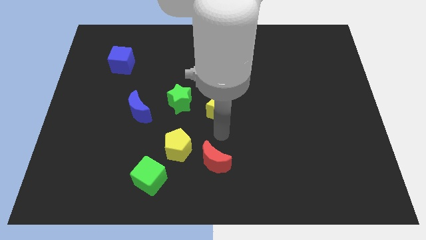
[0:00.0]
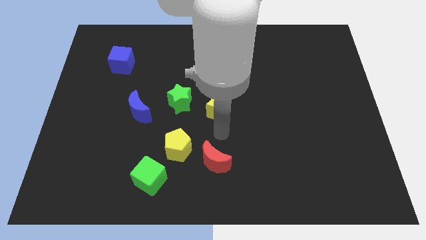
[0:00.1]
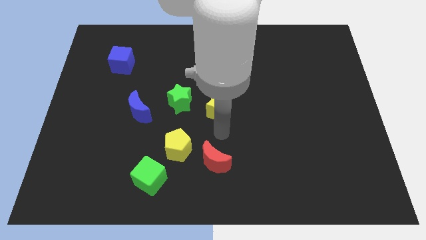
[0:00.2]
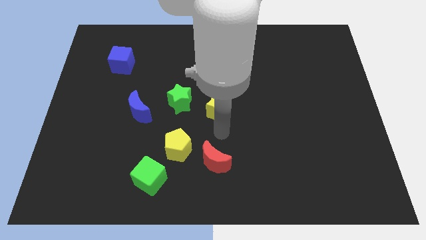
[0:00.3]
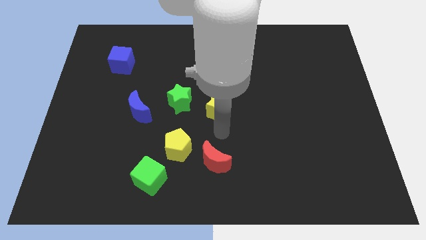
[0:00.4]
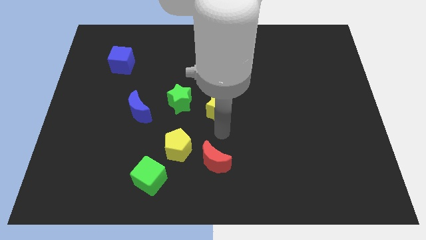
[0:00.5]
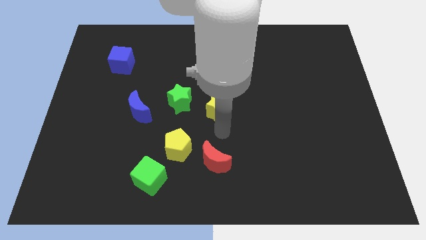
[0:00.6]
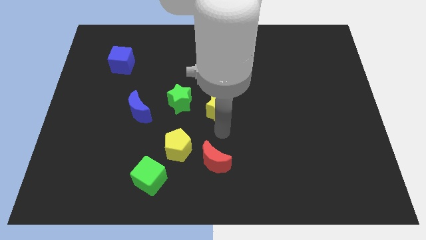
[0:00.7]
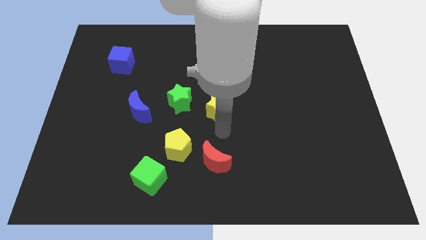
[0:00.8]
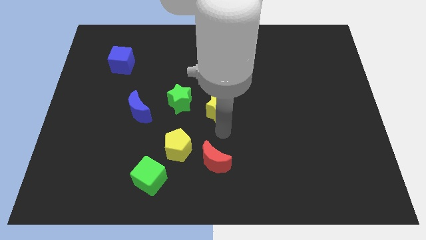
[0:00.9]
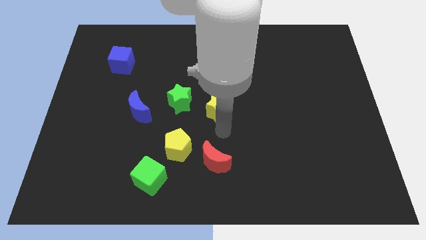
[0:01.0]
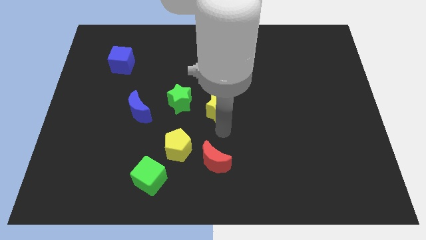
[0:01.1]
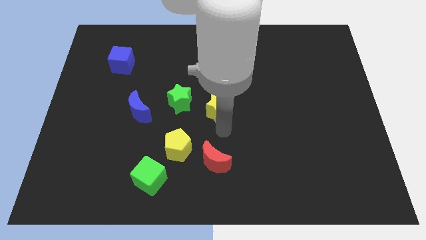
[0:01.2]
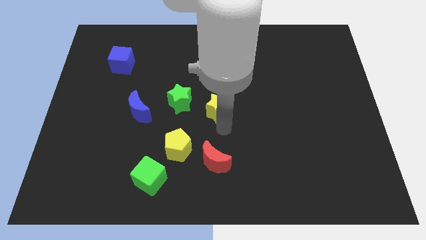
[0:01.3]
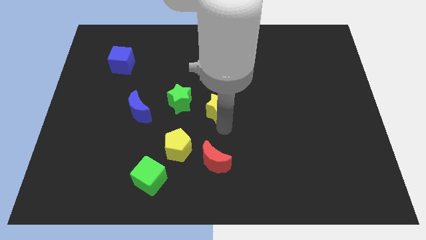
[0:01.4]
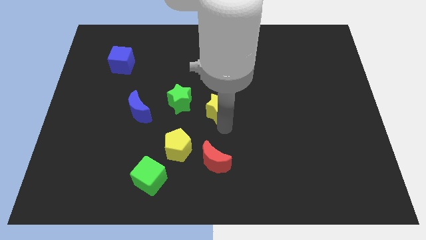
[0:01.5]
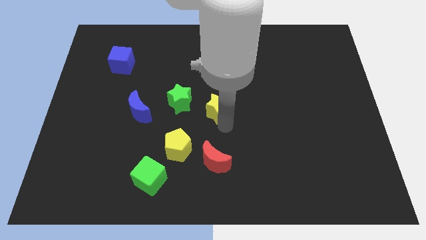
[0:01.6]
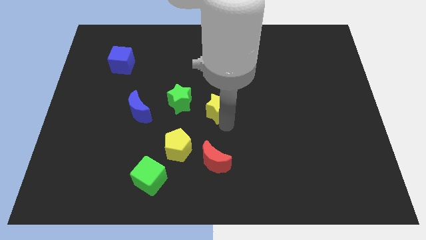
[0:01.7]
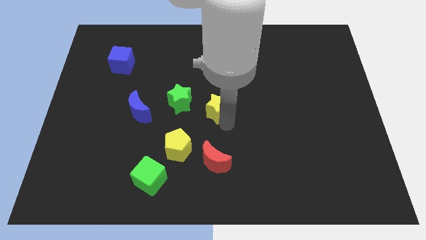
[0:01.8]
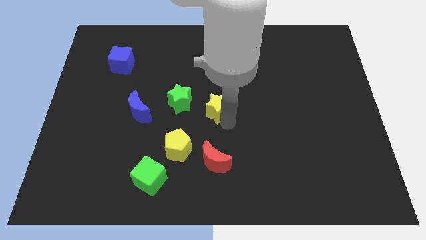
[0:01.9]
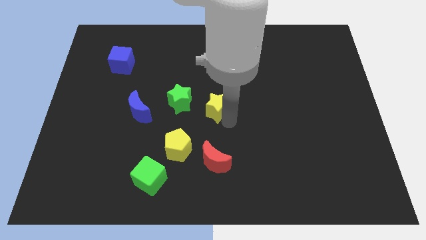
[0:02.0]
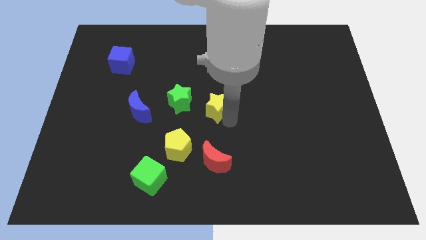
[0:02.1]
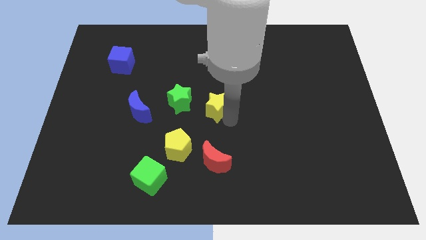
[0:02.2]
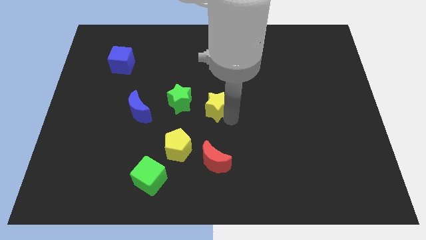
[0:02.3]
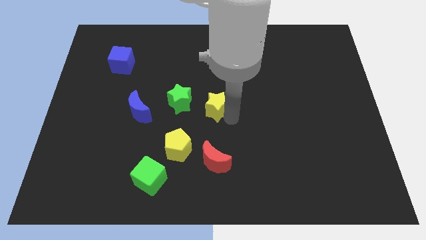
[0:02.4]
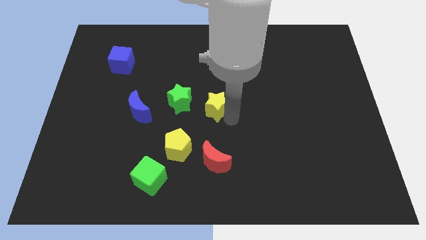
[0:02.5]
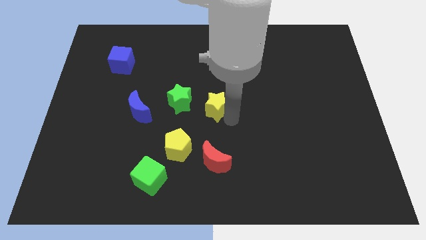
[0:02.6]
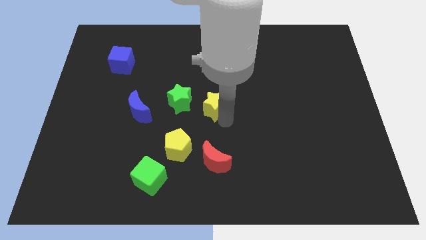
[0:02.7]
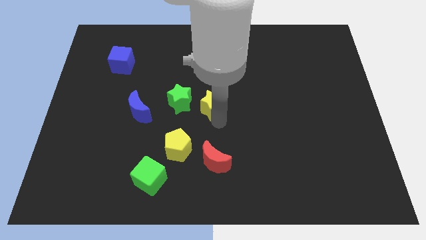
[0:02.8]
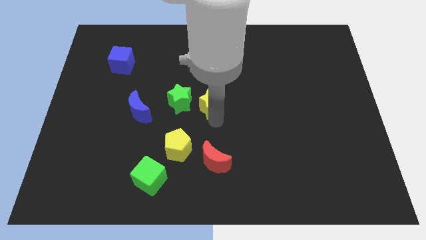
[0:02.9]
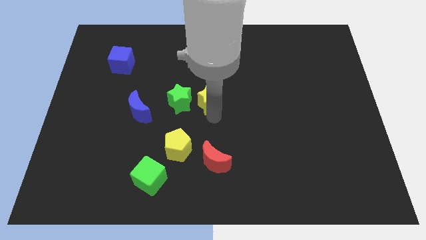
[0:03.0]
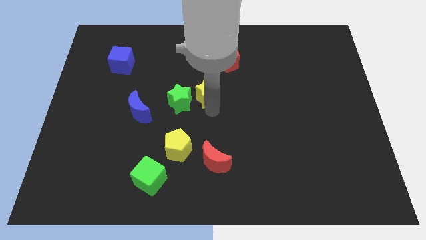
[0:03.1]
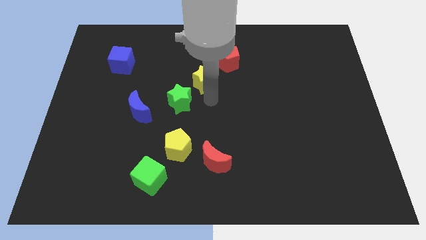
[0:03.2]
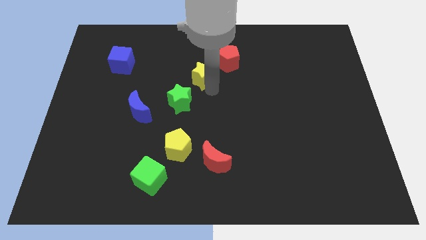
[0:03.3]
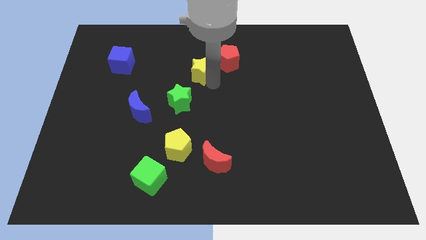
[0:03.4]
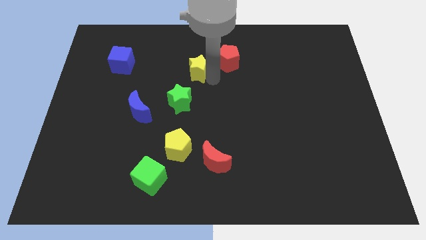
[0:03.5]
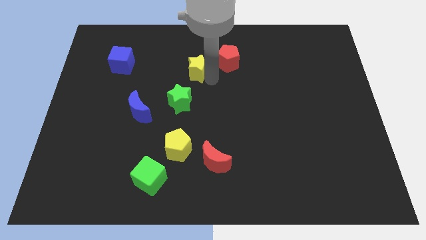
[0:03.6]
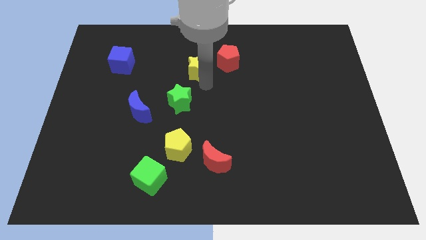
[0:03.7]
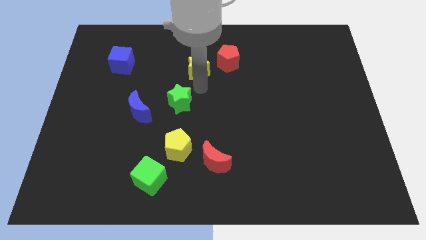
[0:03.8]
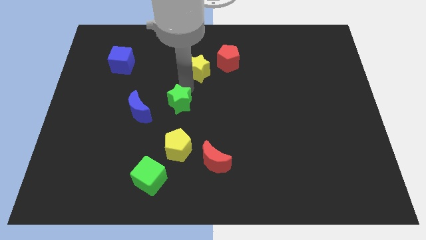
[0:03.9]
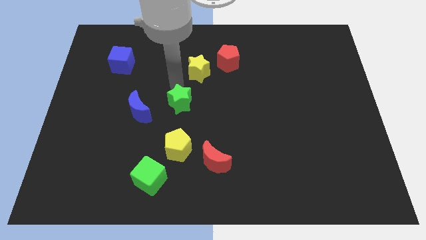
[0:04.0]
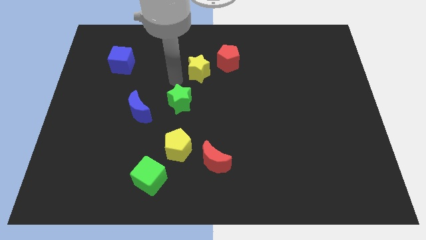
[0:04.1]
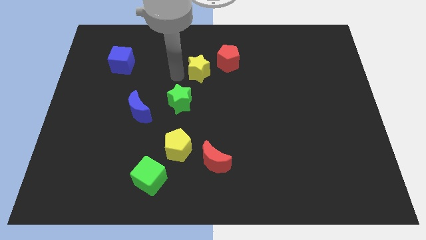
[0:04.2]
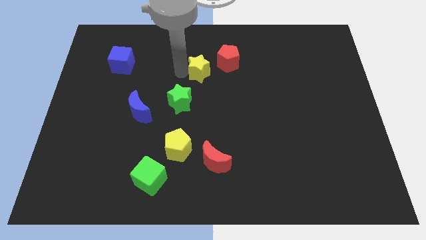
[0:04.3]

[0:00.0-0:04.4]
push the yellow star towards the left of red pentagon

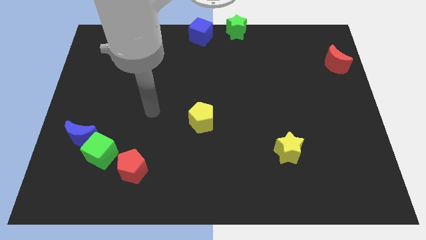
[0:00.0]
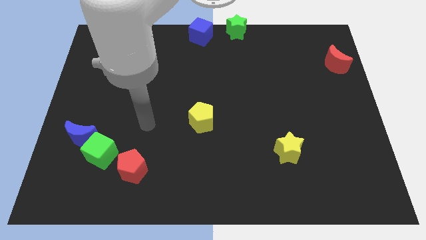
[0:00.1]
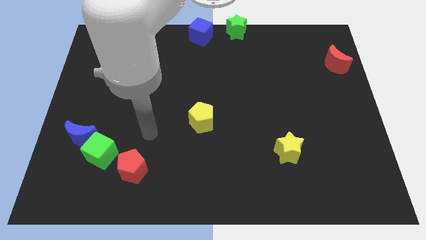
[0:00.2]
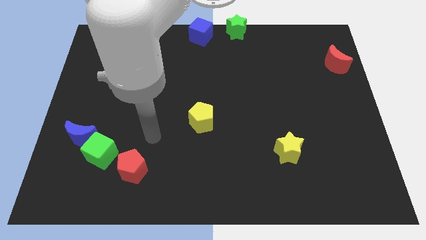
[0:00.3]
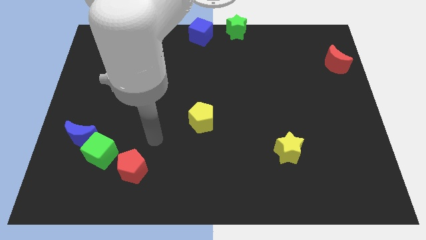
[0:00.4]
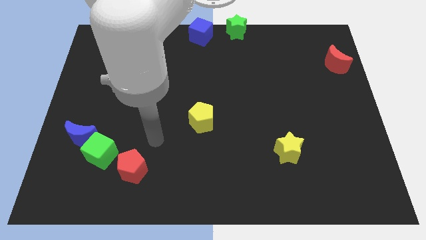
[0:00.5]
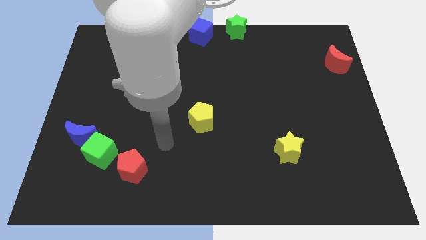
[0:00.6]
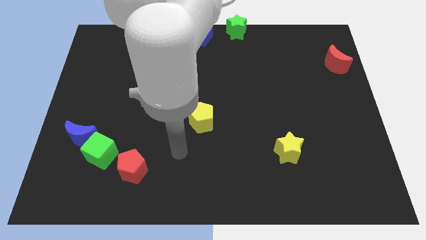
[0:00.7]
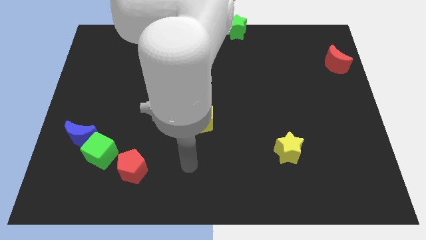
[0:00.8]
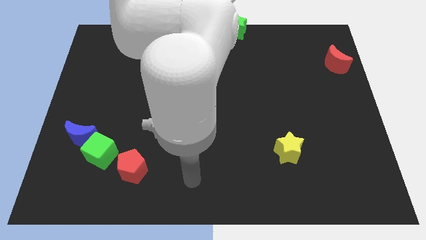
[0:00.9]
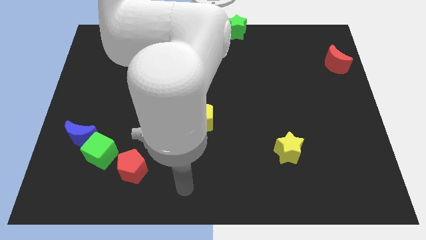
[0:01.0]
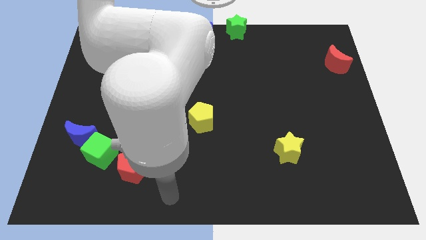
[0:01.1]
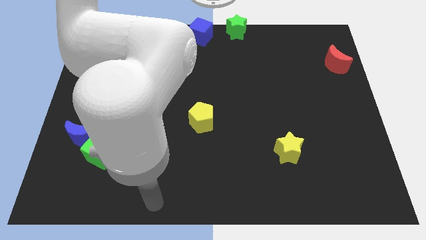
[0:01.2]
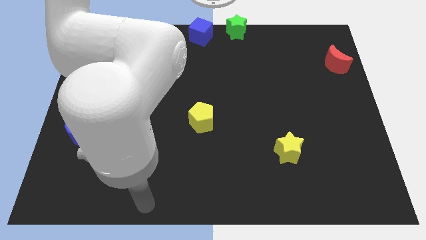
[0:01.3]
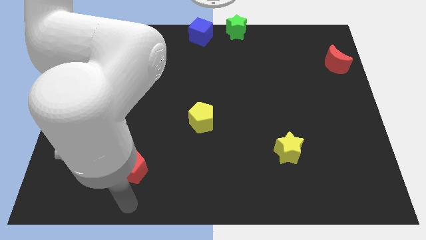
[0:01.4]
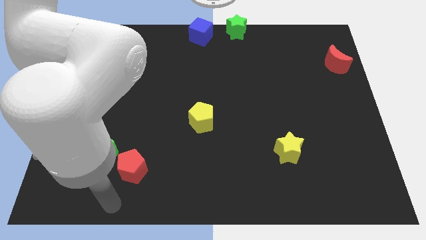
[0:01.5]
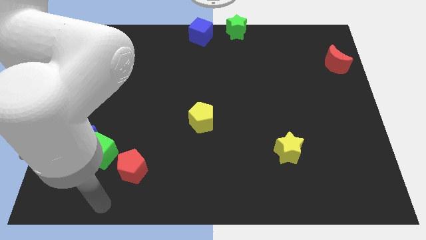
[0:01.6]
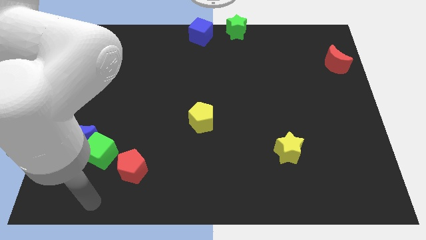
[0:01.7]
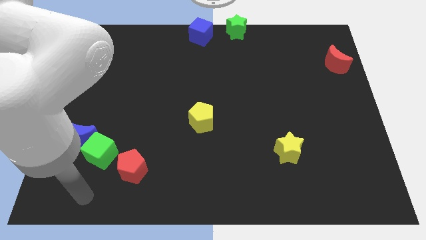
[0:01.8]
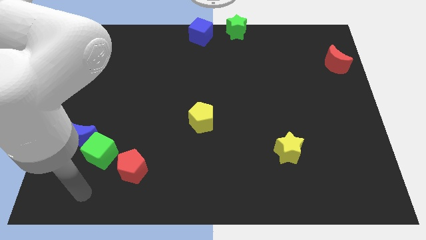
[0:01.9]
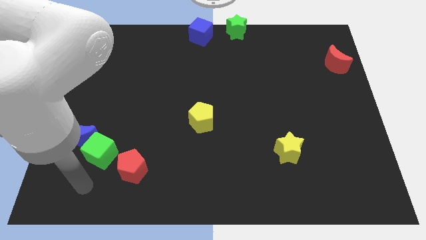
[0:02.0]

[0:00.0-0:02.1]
move your arm to the bottom of the green cube

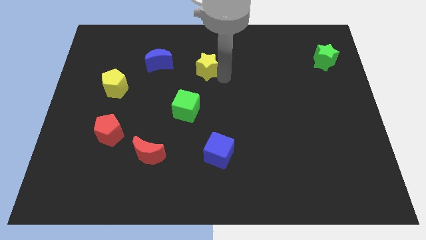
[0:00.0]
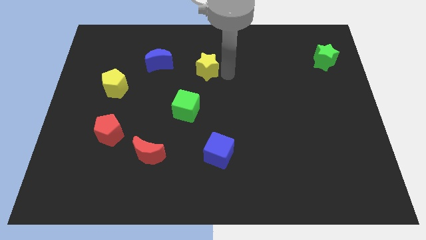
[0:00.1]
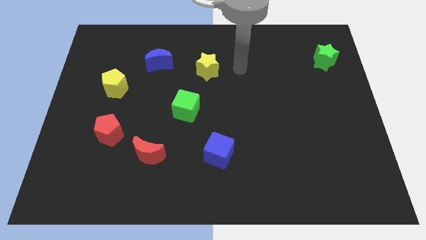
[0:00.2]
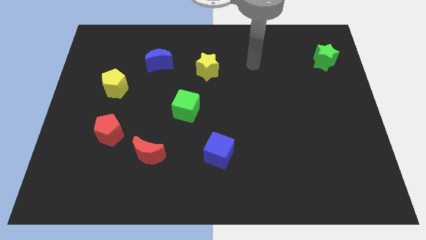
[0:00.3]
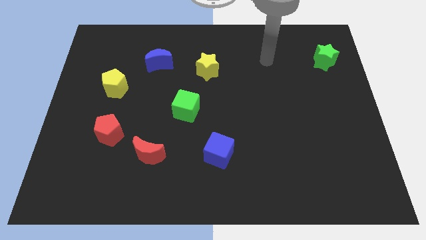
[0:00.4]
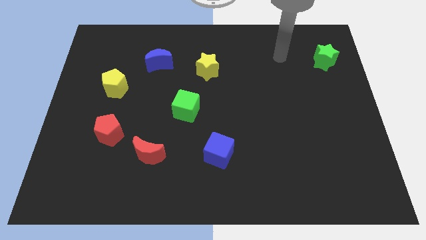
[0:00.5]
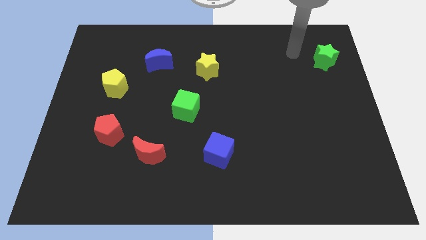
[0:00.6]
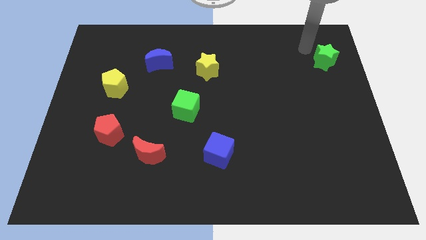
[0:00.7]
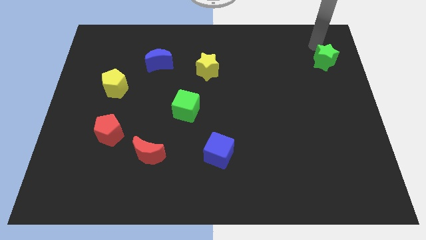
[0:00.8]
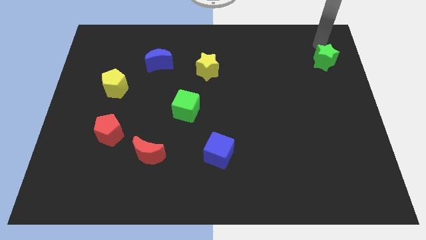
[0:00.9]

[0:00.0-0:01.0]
move the arm away from the yellow star

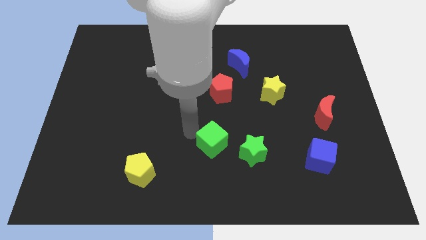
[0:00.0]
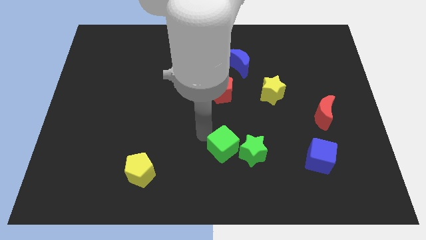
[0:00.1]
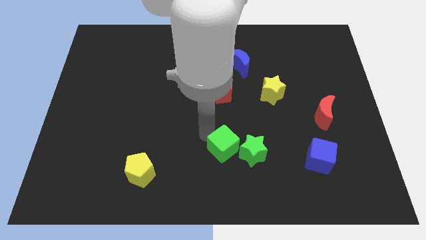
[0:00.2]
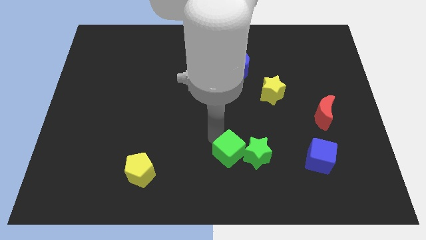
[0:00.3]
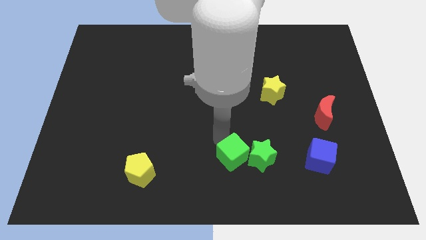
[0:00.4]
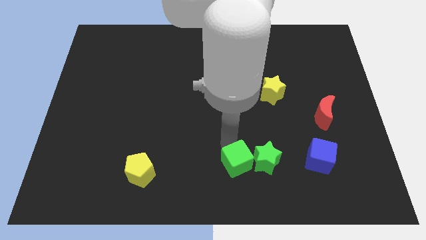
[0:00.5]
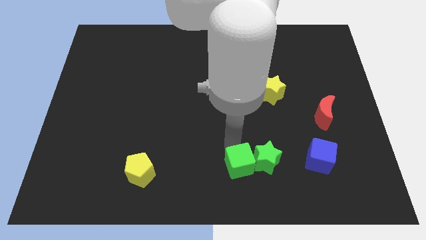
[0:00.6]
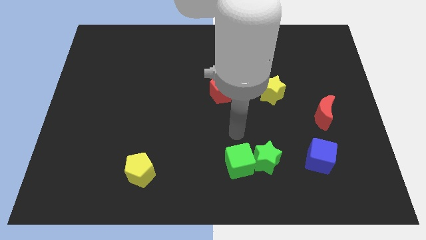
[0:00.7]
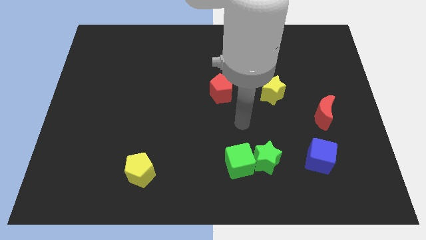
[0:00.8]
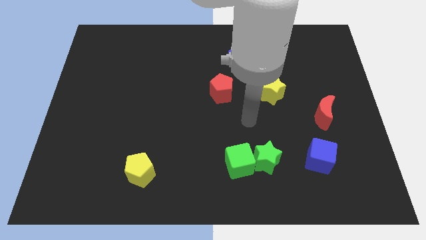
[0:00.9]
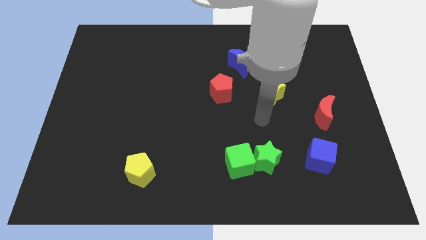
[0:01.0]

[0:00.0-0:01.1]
push the green cube into the green star

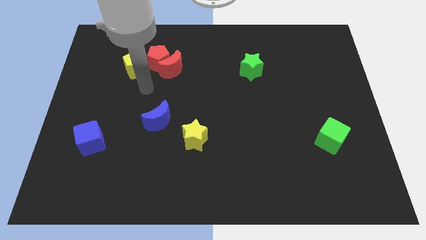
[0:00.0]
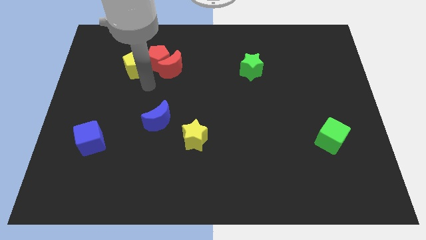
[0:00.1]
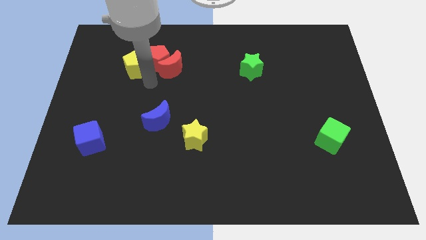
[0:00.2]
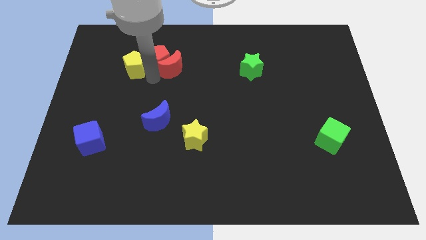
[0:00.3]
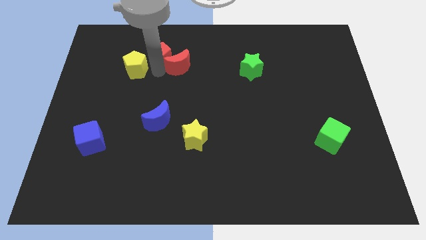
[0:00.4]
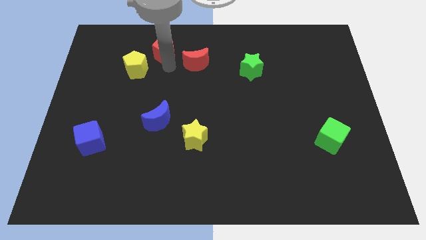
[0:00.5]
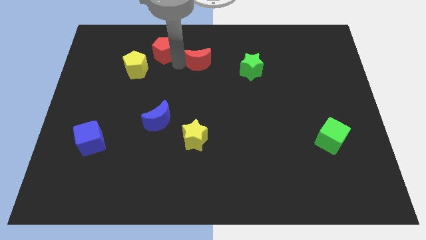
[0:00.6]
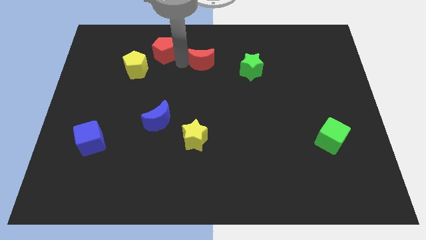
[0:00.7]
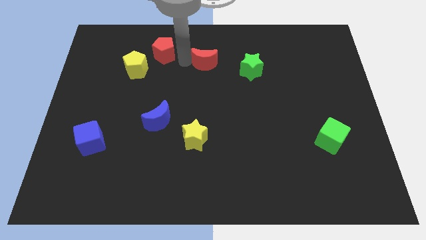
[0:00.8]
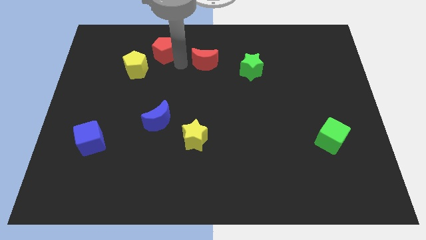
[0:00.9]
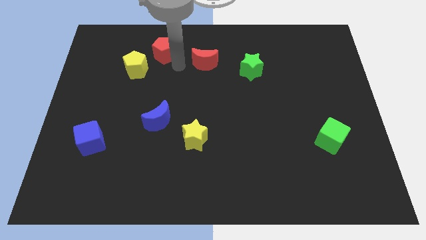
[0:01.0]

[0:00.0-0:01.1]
go and separate the group of red blocks
